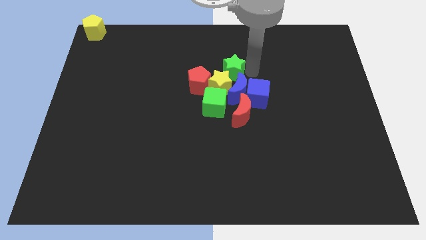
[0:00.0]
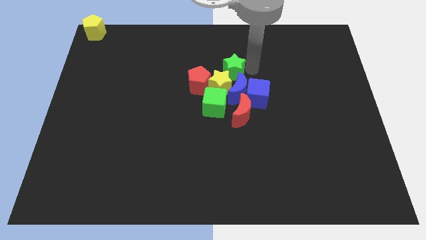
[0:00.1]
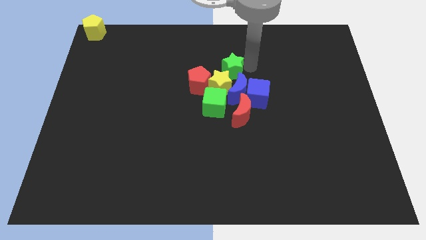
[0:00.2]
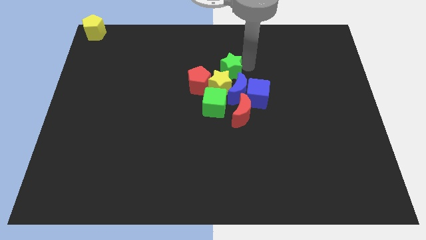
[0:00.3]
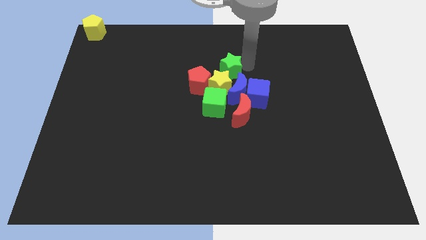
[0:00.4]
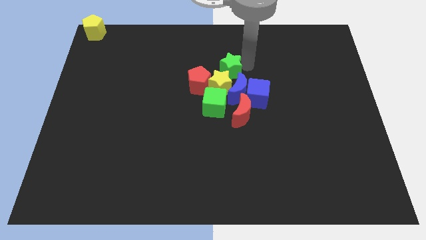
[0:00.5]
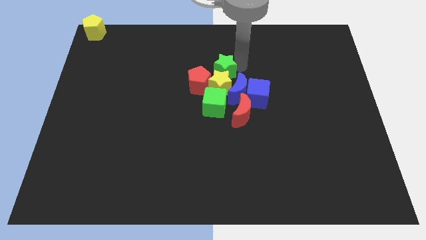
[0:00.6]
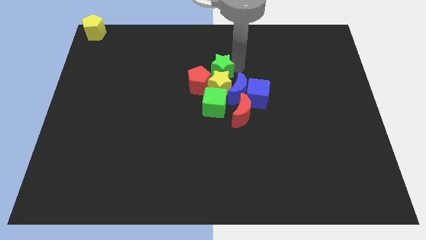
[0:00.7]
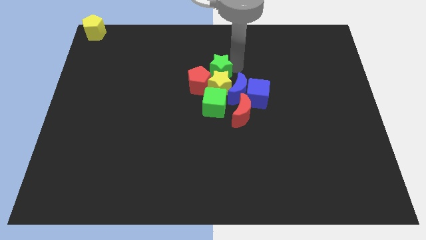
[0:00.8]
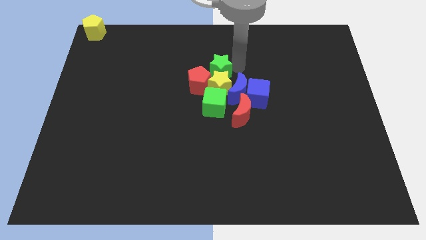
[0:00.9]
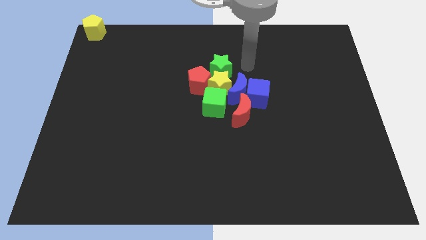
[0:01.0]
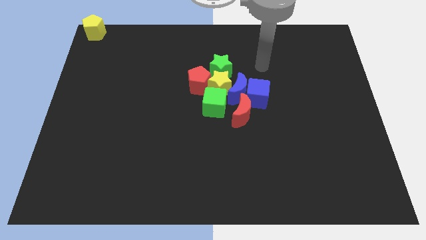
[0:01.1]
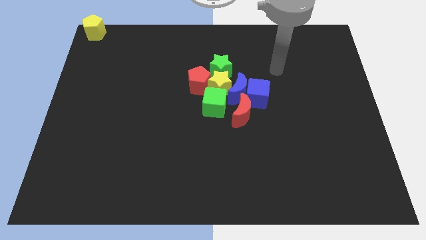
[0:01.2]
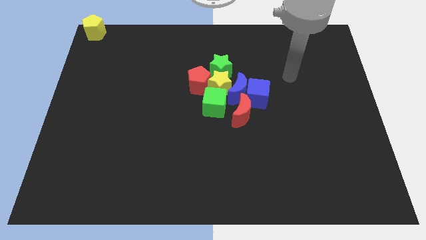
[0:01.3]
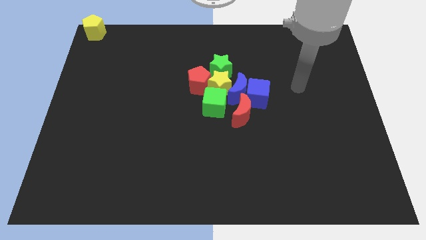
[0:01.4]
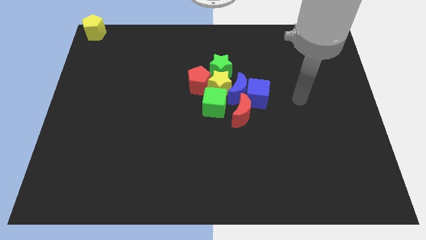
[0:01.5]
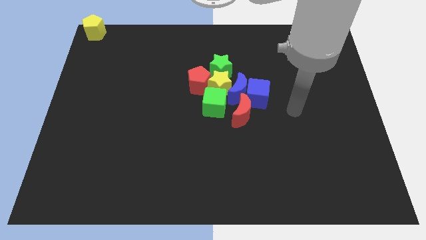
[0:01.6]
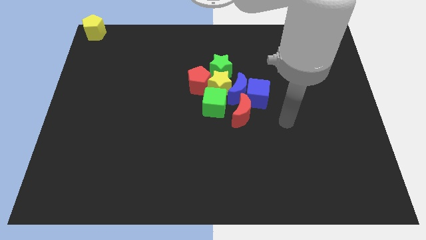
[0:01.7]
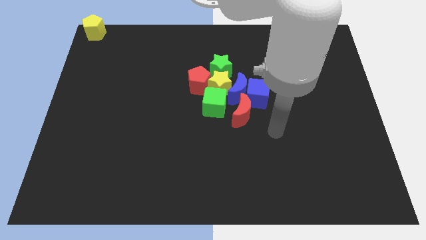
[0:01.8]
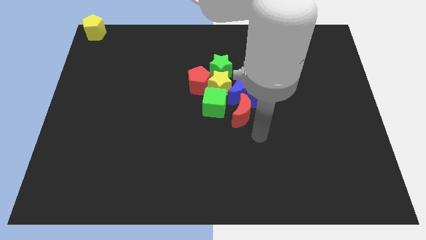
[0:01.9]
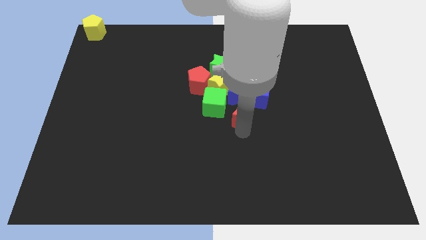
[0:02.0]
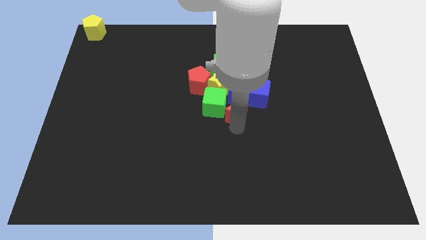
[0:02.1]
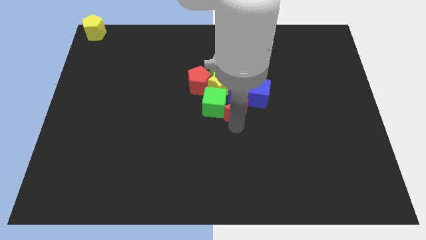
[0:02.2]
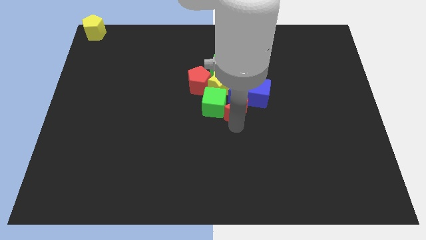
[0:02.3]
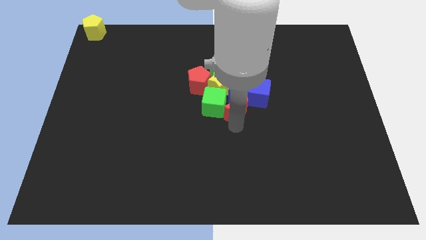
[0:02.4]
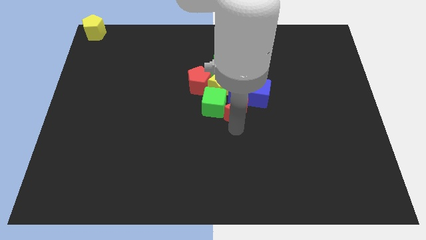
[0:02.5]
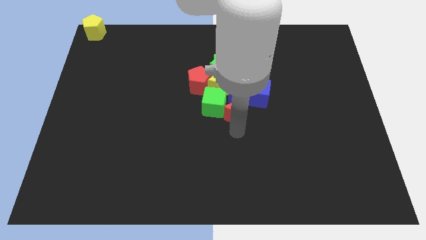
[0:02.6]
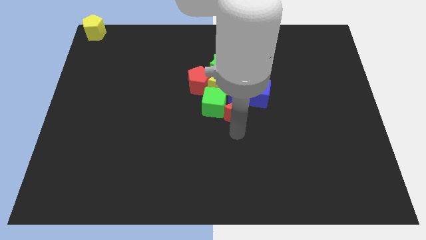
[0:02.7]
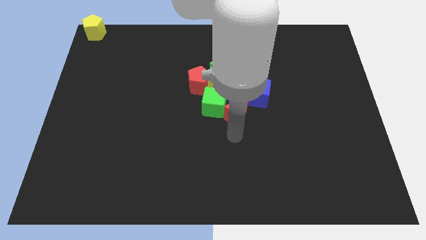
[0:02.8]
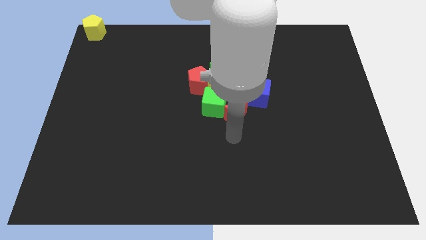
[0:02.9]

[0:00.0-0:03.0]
push the red crescent slightly to the center of the board

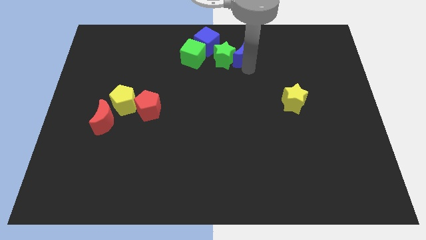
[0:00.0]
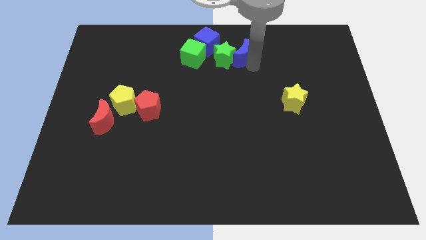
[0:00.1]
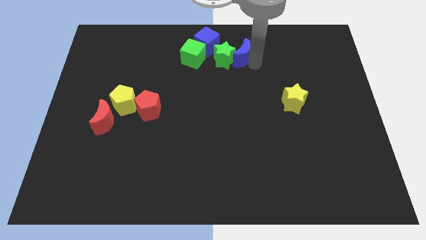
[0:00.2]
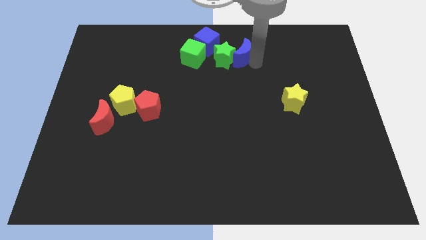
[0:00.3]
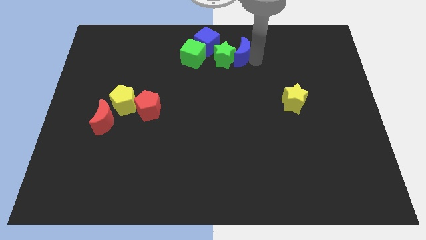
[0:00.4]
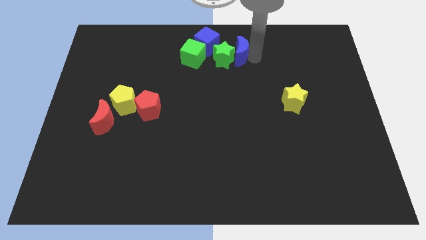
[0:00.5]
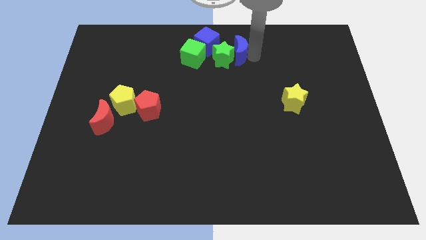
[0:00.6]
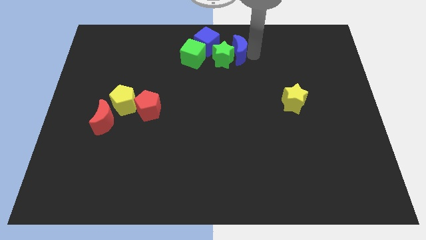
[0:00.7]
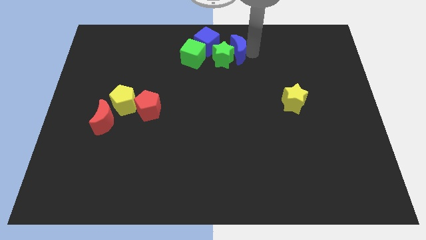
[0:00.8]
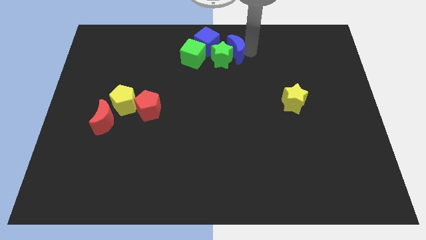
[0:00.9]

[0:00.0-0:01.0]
push the blue crescent into the green star

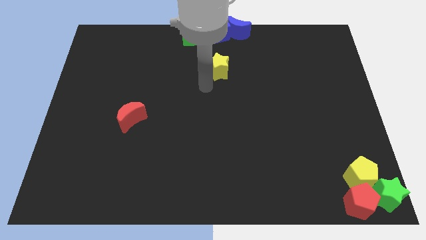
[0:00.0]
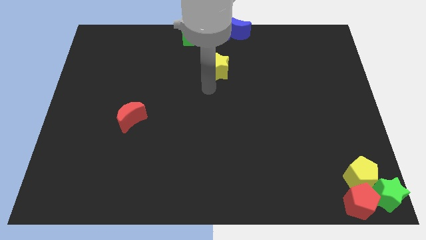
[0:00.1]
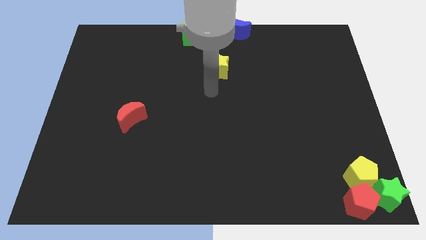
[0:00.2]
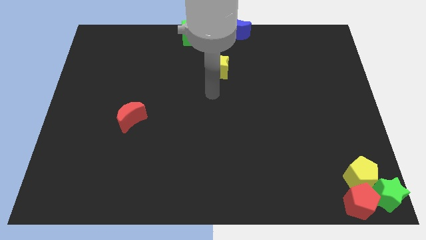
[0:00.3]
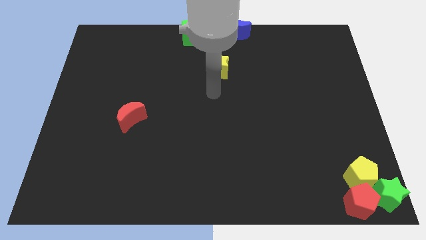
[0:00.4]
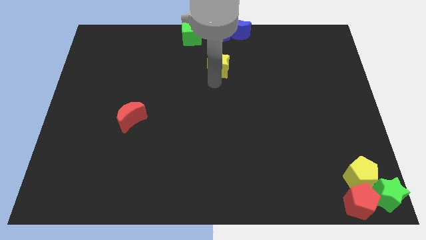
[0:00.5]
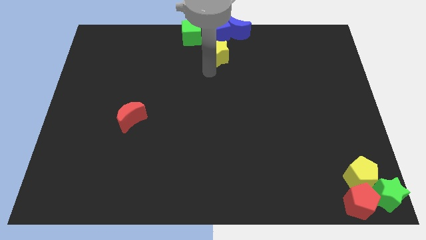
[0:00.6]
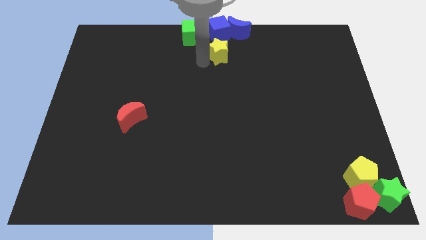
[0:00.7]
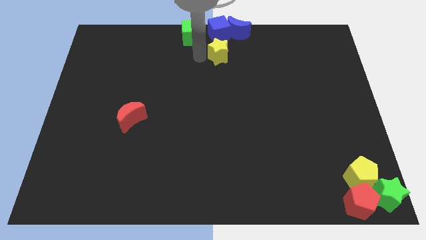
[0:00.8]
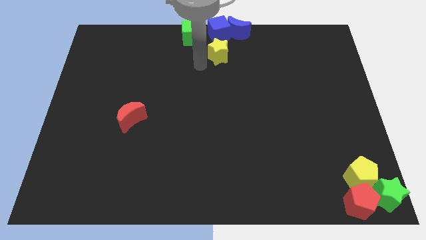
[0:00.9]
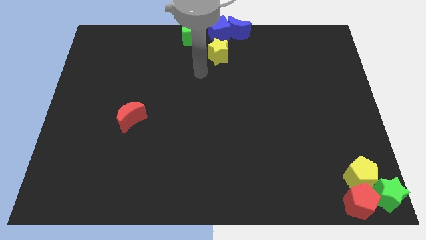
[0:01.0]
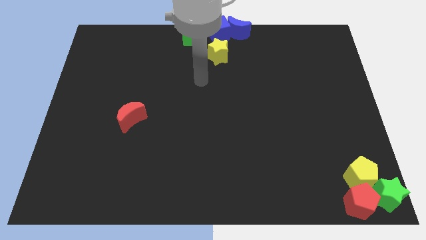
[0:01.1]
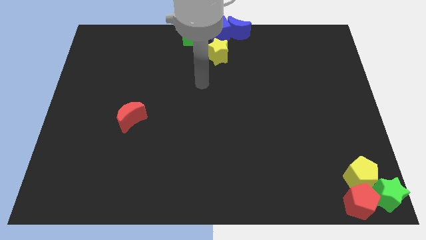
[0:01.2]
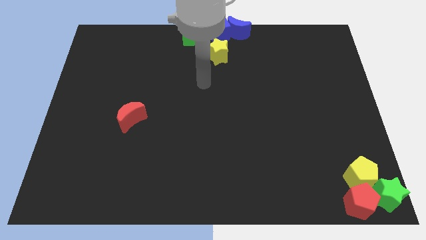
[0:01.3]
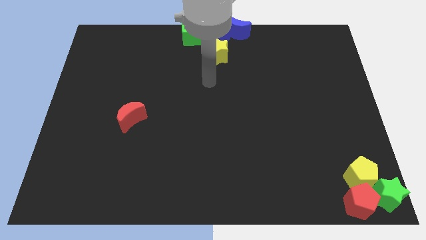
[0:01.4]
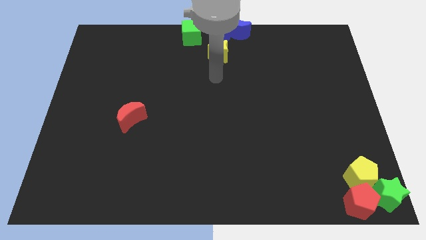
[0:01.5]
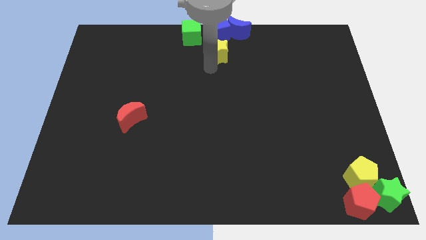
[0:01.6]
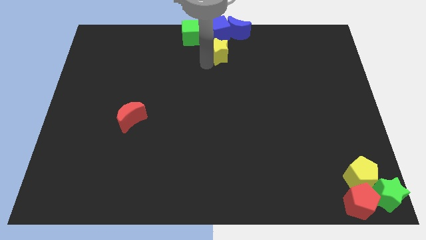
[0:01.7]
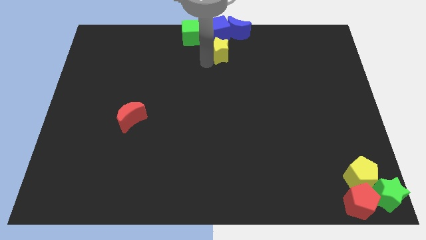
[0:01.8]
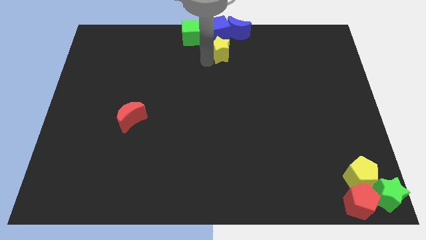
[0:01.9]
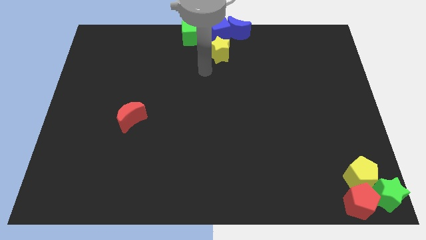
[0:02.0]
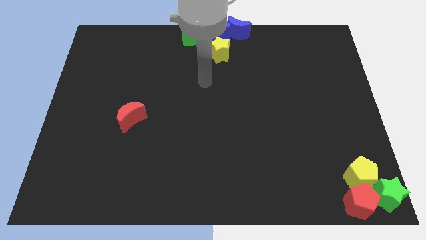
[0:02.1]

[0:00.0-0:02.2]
place the yellow star below to the blue cube

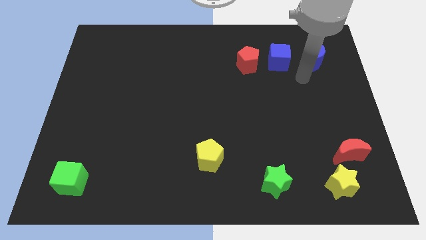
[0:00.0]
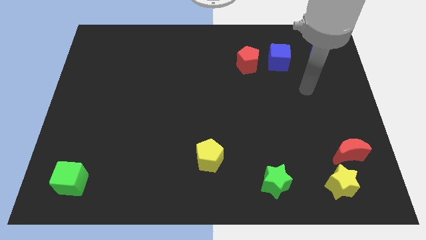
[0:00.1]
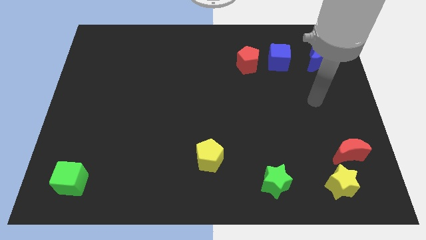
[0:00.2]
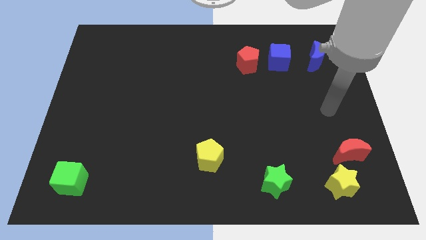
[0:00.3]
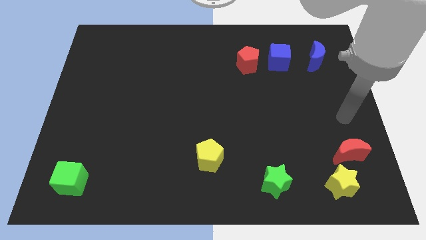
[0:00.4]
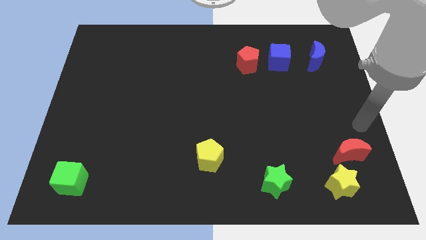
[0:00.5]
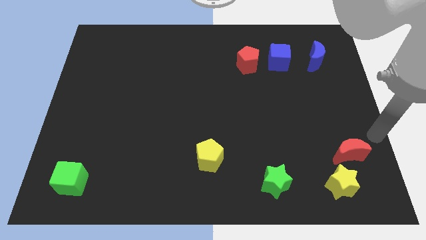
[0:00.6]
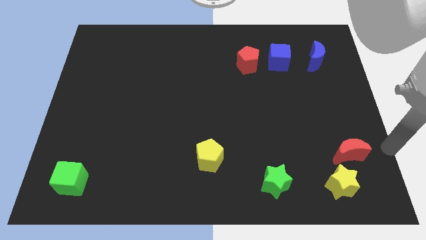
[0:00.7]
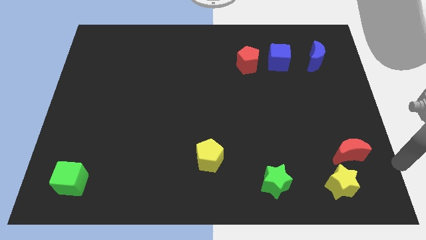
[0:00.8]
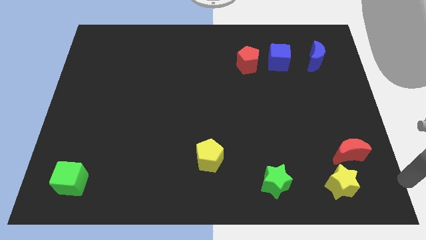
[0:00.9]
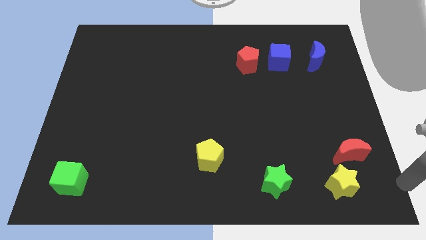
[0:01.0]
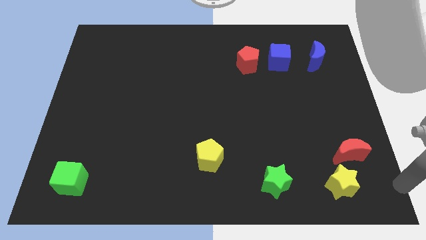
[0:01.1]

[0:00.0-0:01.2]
move the arm towards the right bottom of the board

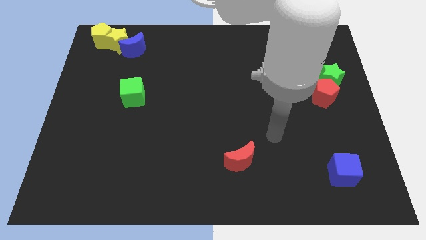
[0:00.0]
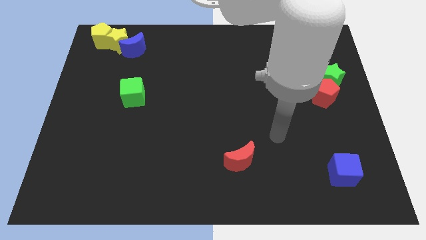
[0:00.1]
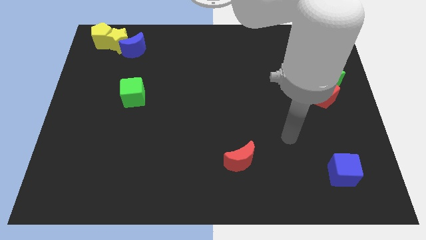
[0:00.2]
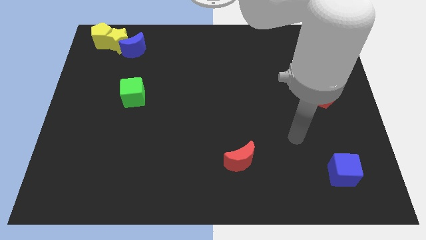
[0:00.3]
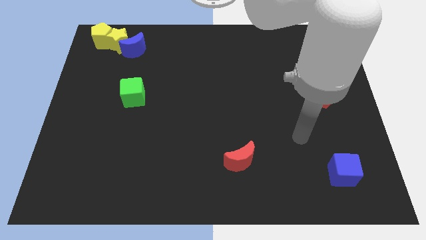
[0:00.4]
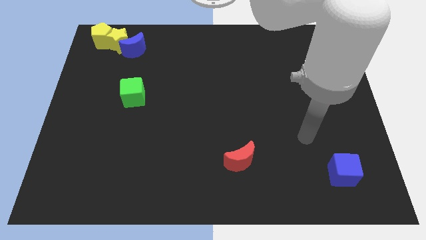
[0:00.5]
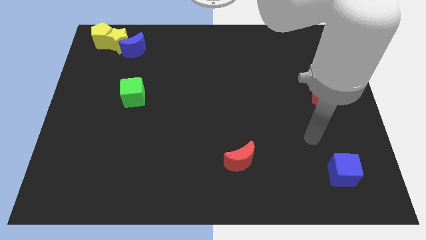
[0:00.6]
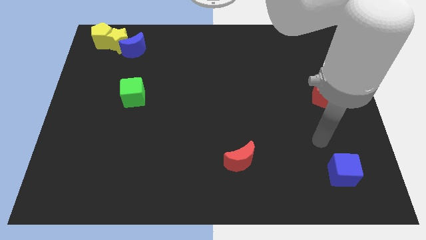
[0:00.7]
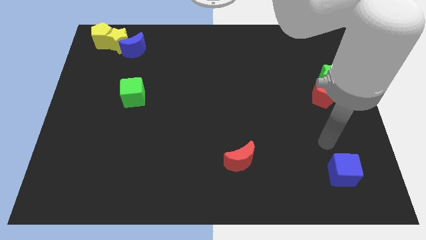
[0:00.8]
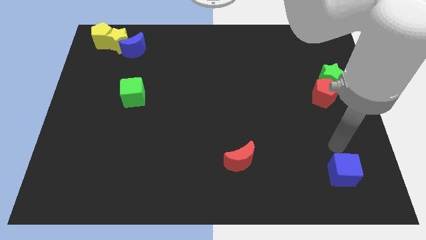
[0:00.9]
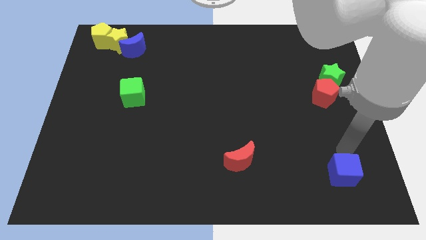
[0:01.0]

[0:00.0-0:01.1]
place arm on the top of blue cube

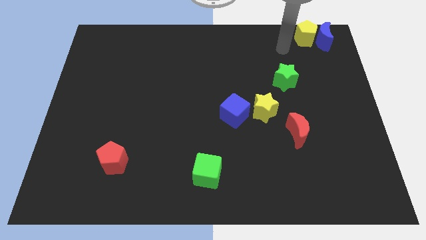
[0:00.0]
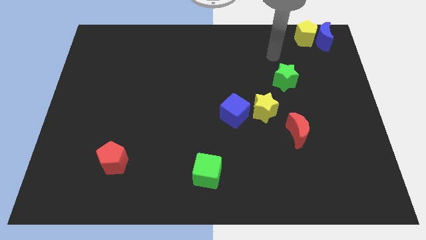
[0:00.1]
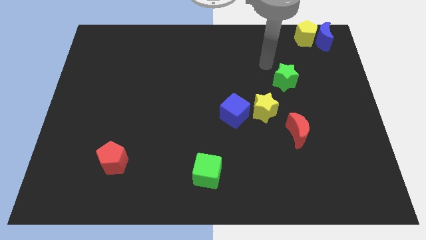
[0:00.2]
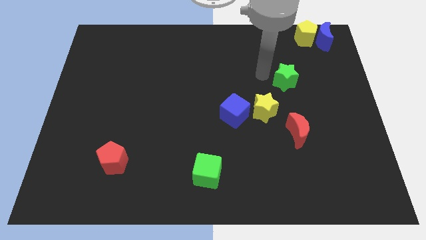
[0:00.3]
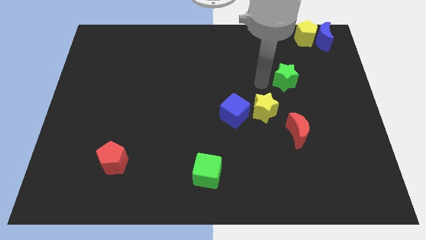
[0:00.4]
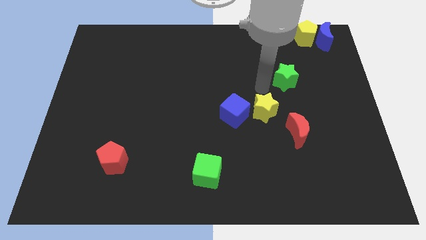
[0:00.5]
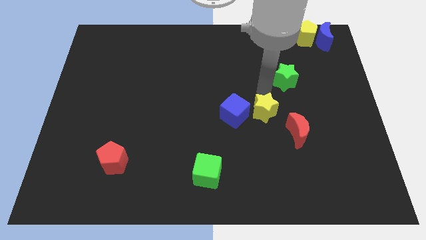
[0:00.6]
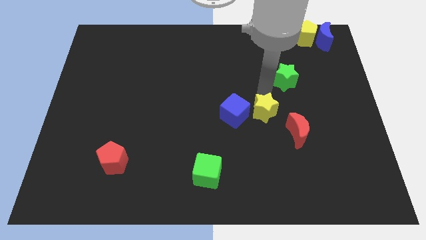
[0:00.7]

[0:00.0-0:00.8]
move the arm towards the yellow star
